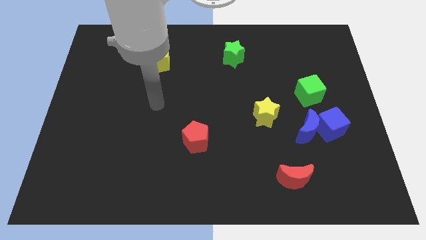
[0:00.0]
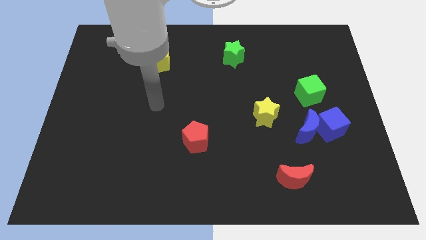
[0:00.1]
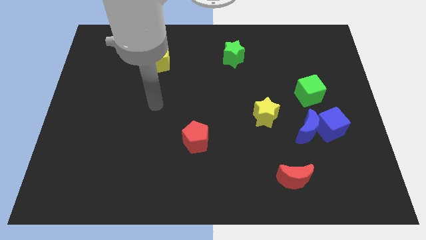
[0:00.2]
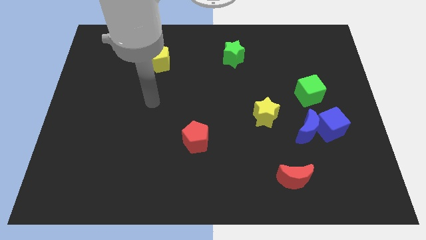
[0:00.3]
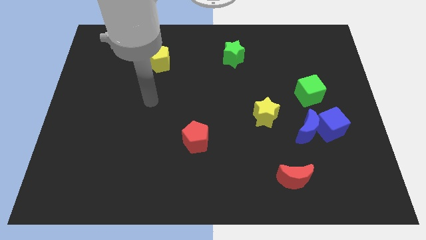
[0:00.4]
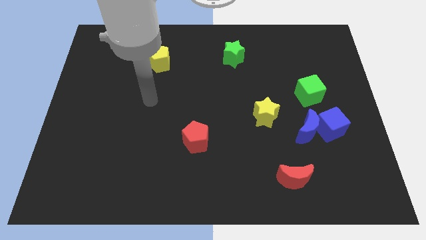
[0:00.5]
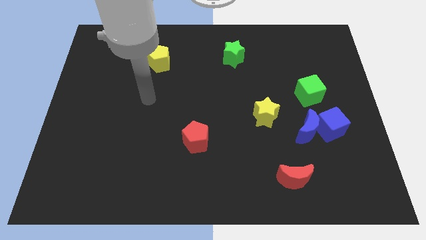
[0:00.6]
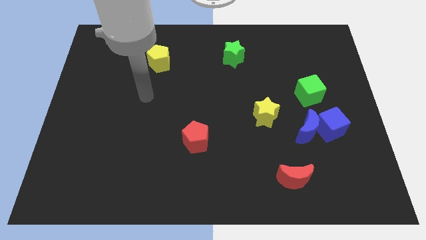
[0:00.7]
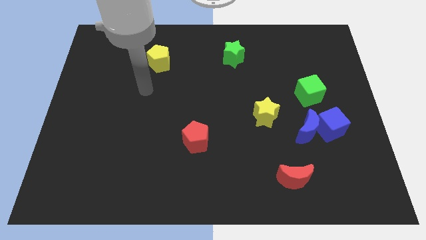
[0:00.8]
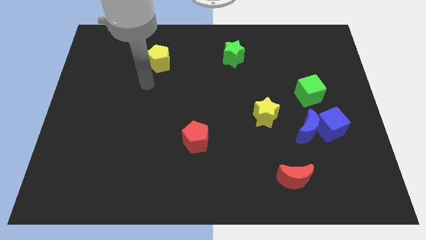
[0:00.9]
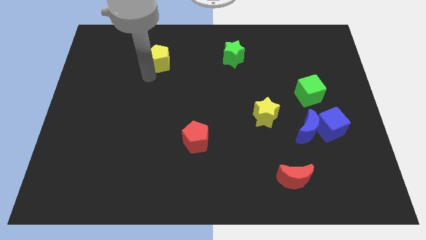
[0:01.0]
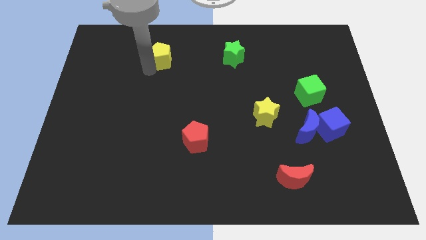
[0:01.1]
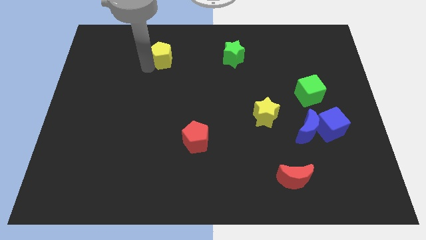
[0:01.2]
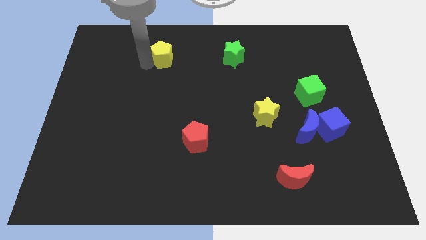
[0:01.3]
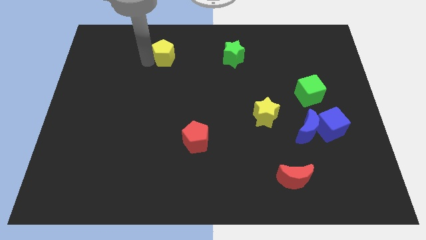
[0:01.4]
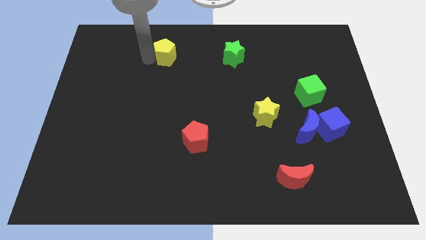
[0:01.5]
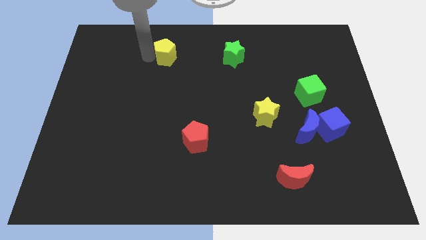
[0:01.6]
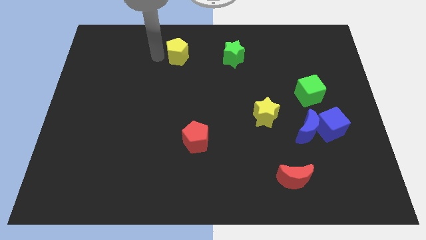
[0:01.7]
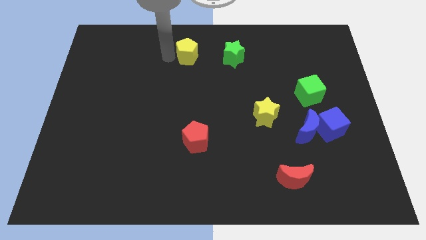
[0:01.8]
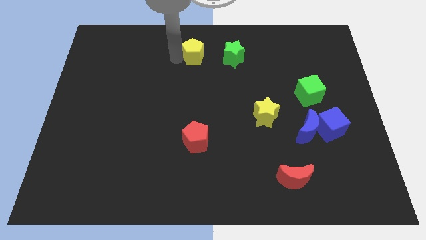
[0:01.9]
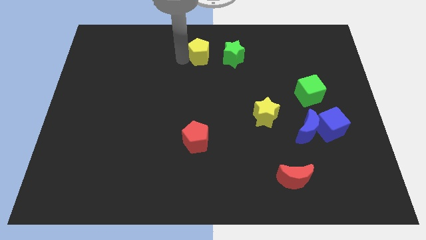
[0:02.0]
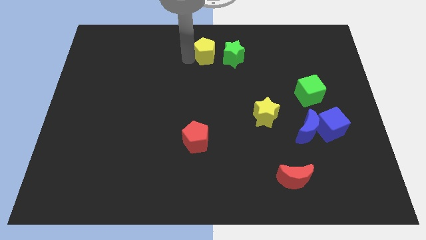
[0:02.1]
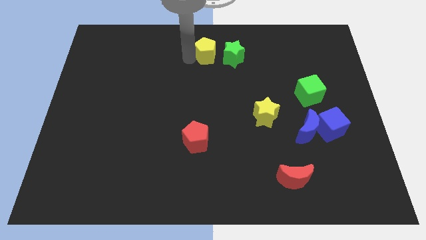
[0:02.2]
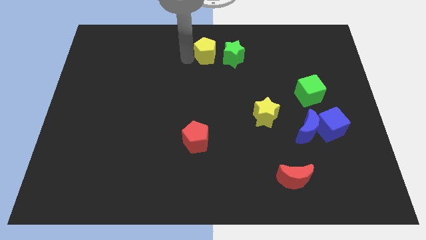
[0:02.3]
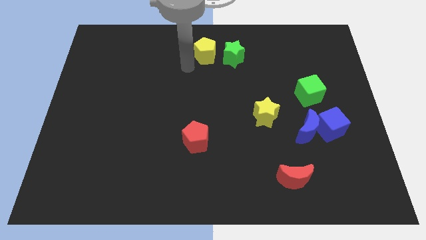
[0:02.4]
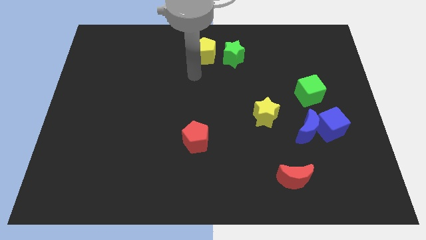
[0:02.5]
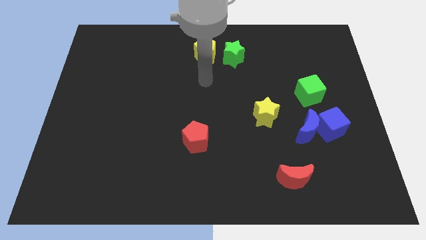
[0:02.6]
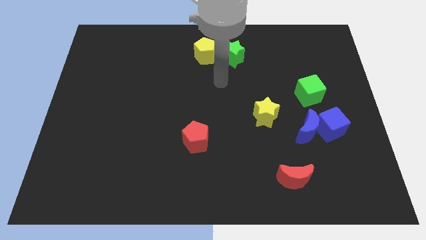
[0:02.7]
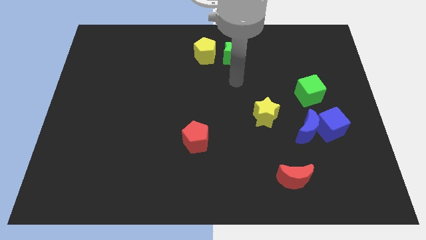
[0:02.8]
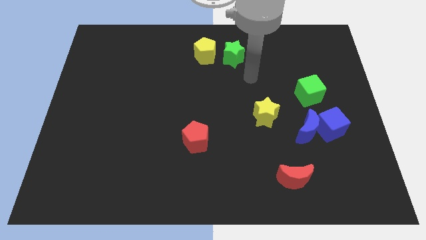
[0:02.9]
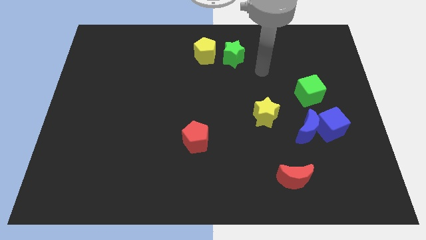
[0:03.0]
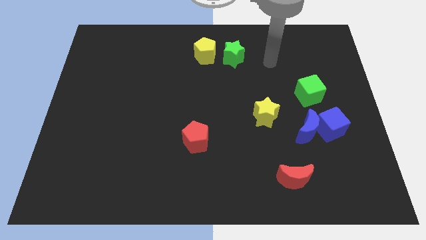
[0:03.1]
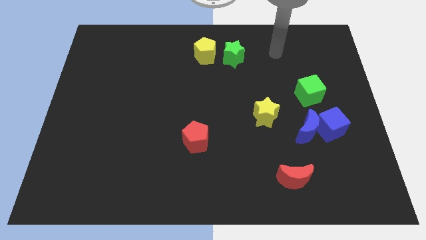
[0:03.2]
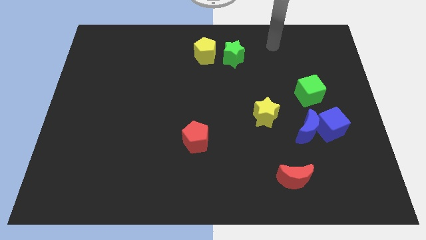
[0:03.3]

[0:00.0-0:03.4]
move the yellow pentagon towards the green star

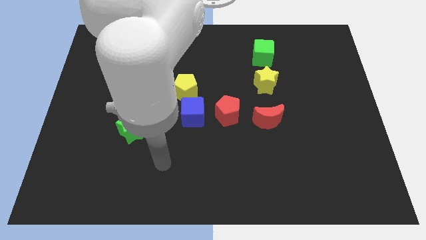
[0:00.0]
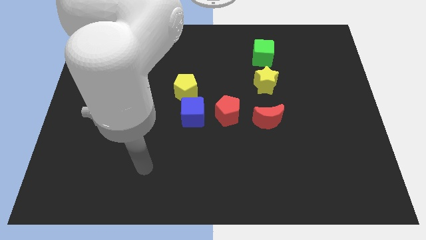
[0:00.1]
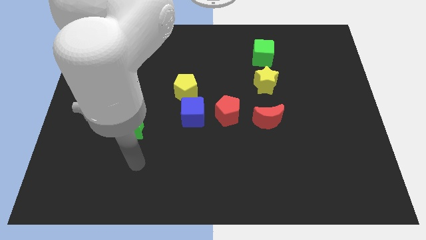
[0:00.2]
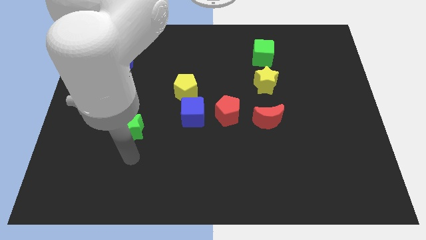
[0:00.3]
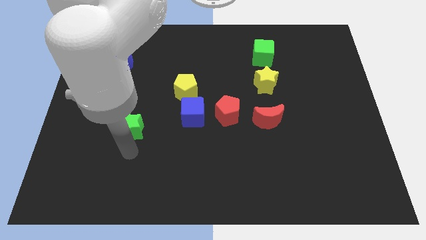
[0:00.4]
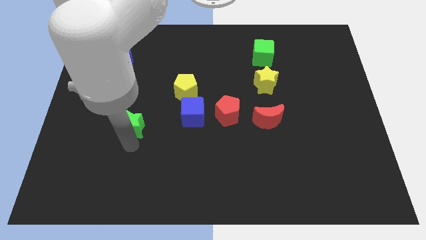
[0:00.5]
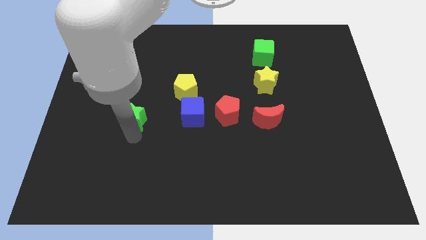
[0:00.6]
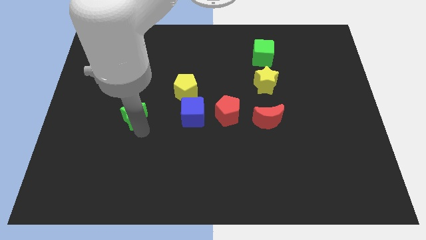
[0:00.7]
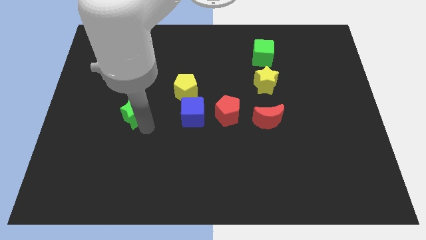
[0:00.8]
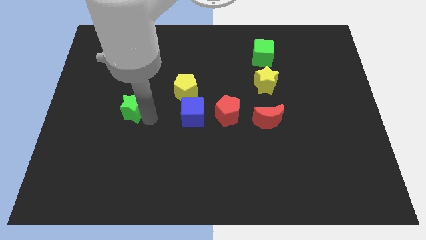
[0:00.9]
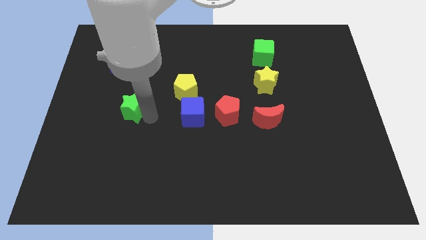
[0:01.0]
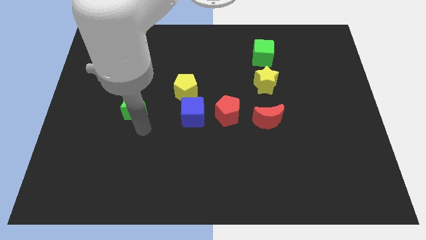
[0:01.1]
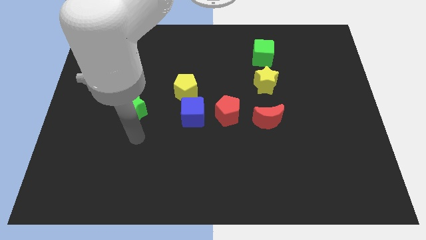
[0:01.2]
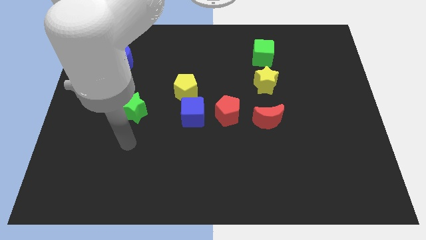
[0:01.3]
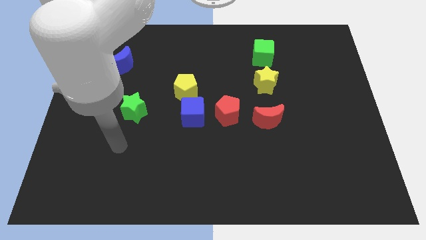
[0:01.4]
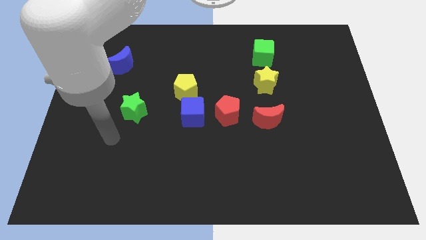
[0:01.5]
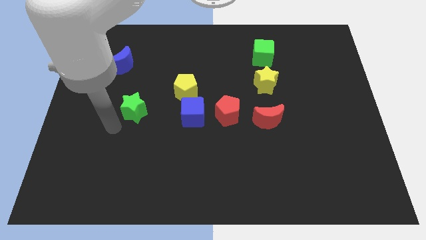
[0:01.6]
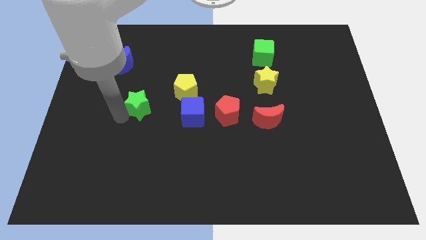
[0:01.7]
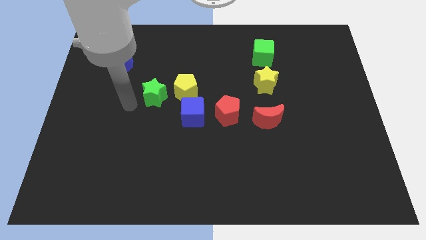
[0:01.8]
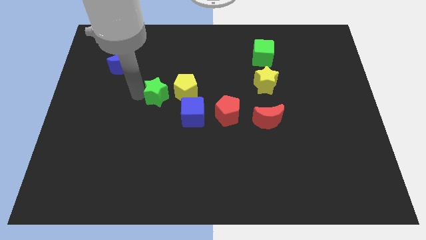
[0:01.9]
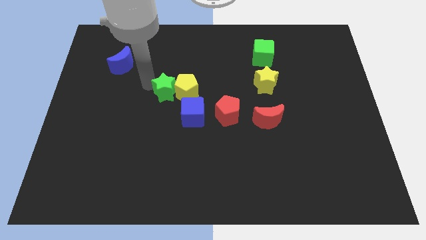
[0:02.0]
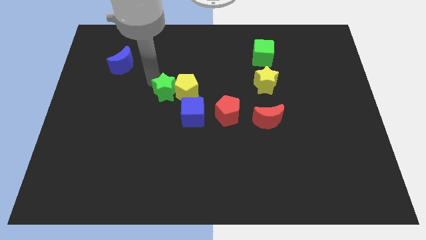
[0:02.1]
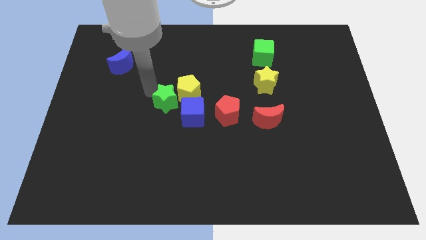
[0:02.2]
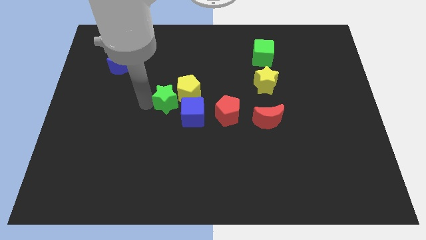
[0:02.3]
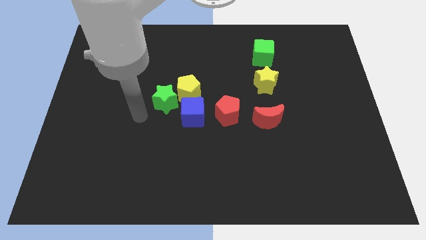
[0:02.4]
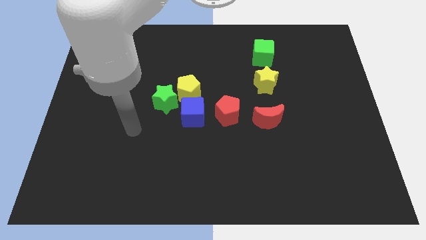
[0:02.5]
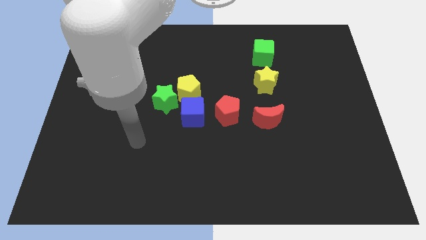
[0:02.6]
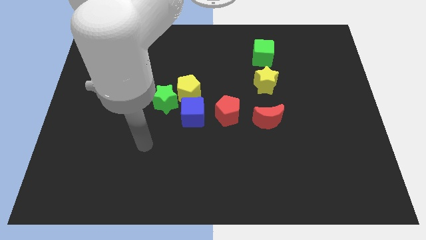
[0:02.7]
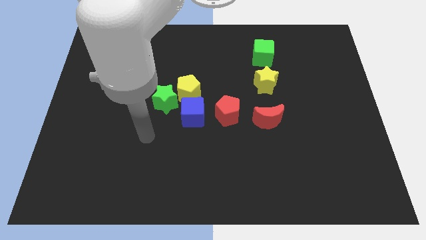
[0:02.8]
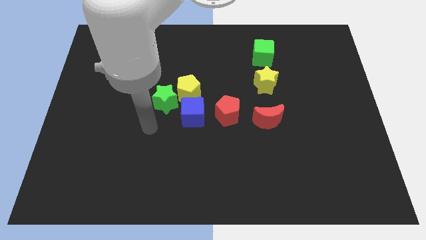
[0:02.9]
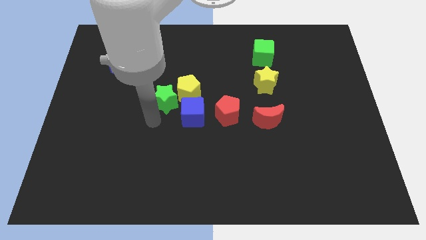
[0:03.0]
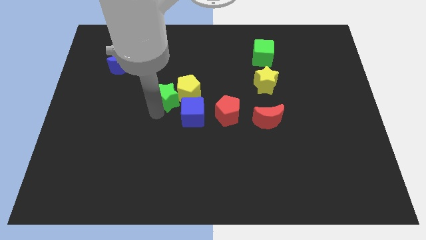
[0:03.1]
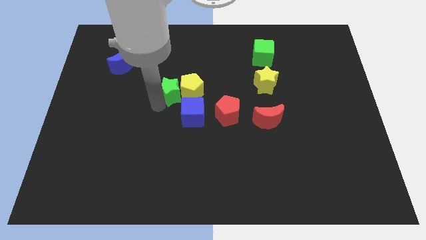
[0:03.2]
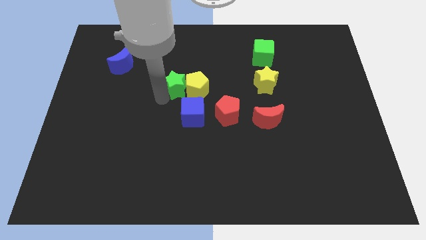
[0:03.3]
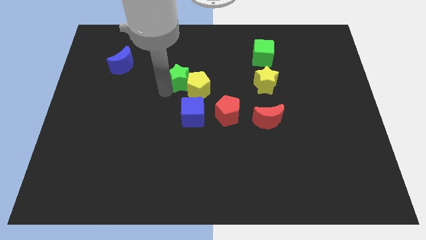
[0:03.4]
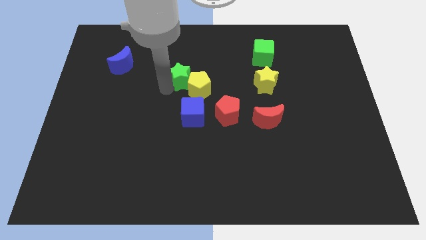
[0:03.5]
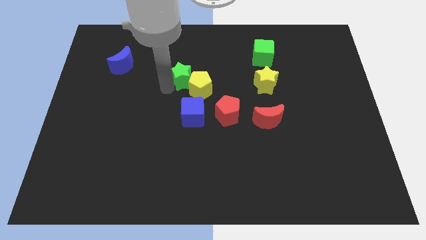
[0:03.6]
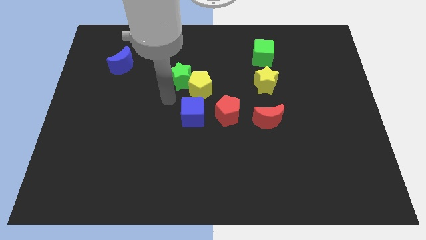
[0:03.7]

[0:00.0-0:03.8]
make the green star to touch the left side of the yellow pentagon

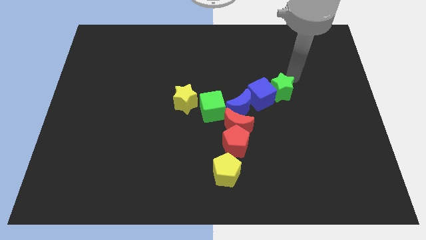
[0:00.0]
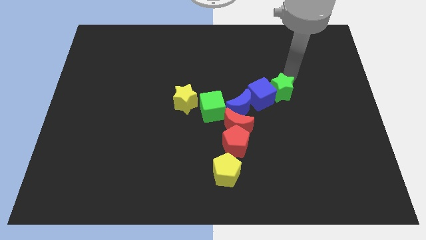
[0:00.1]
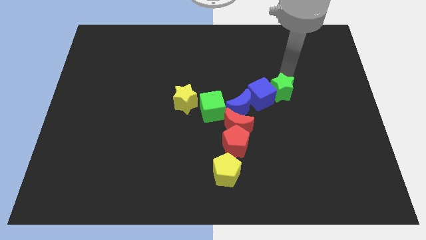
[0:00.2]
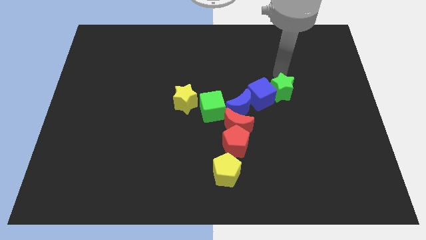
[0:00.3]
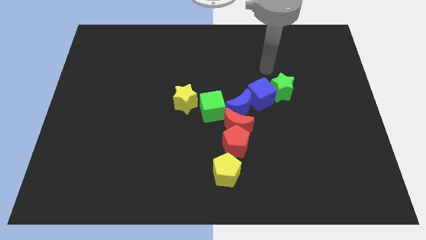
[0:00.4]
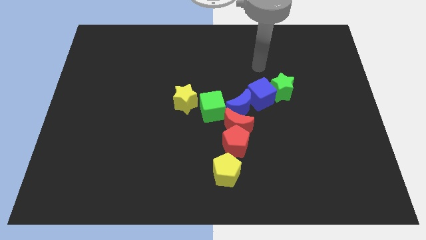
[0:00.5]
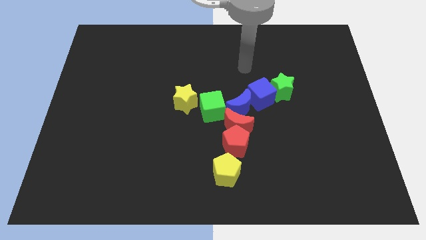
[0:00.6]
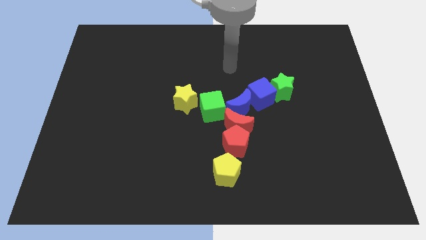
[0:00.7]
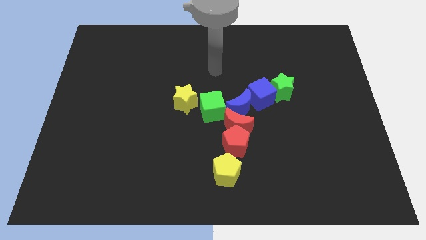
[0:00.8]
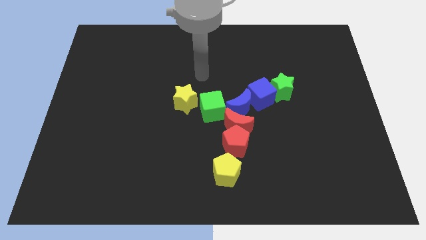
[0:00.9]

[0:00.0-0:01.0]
move the arm away from the green star

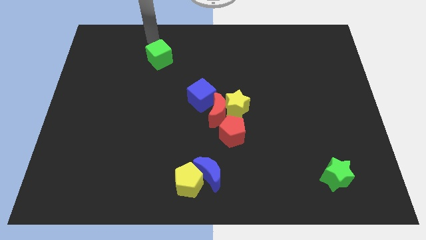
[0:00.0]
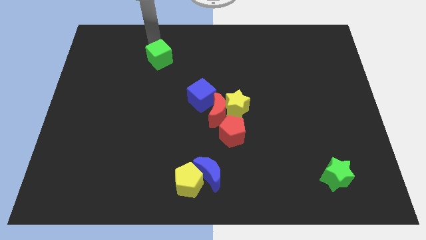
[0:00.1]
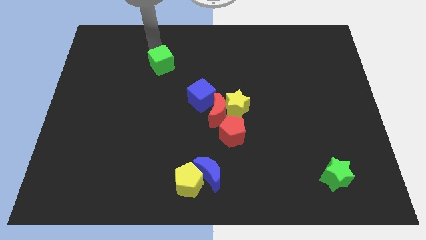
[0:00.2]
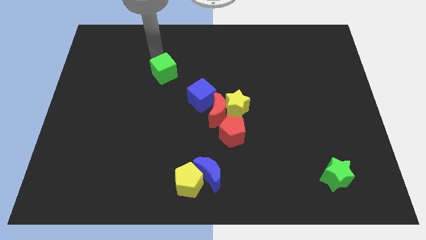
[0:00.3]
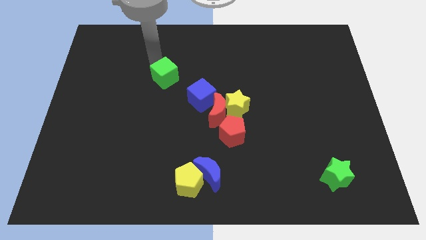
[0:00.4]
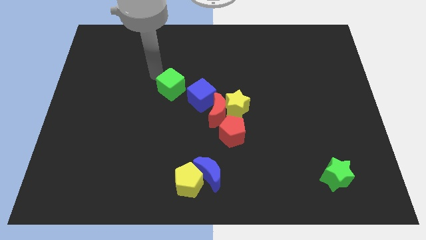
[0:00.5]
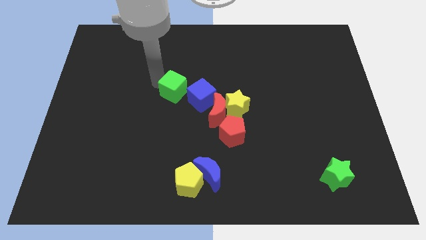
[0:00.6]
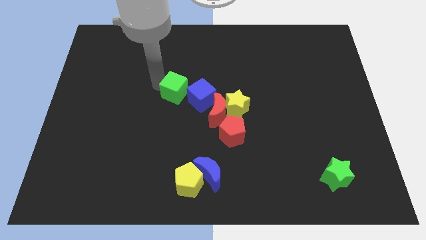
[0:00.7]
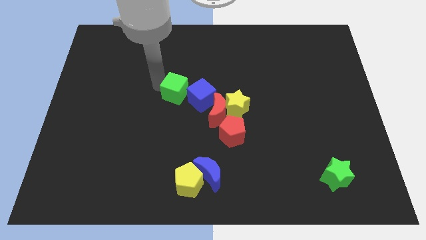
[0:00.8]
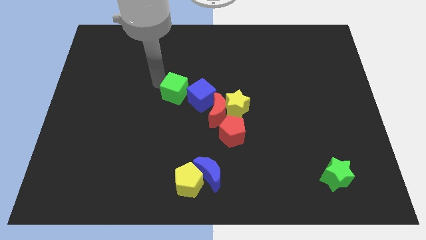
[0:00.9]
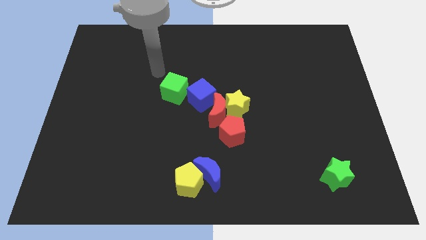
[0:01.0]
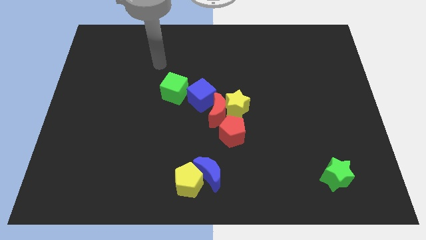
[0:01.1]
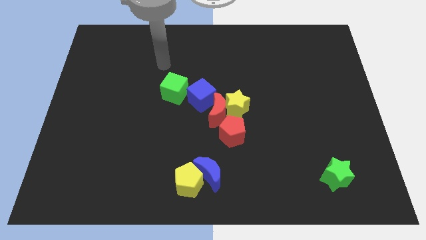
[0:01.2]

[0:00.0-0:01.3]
move the green star close to the blue cube
